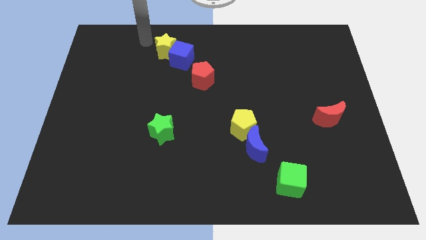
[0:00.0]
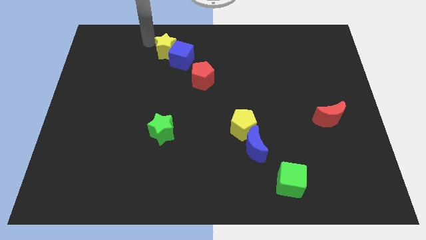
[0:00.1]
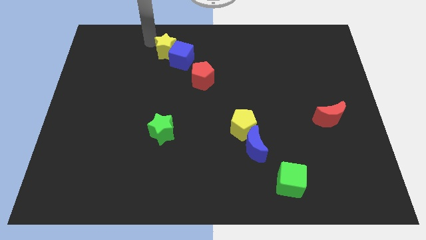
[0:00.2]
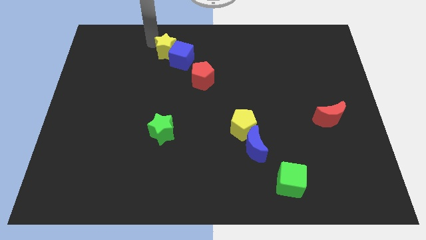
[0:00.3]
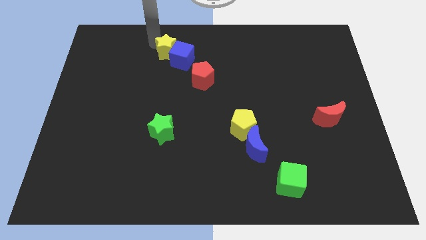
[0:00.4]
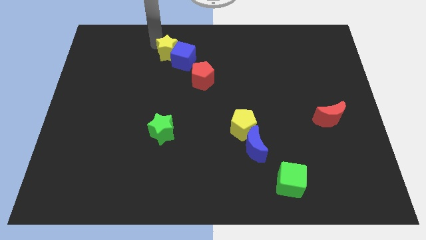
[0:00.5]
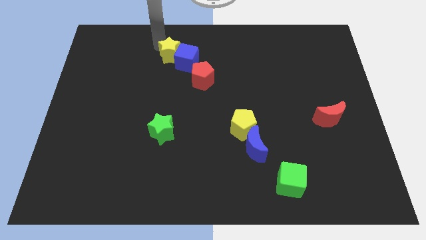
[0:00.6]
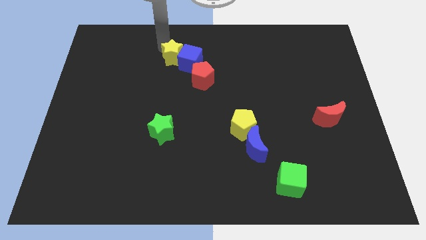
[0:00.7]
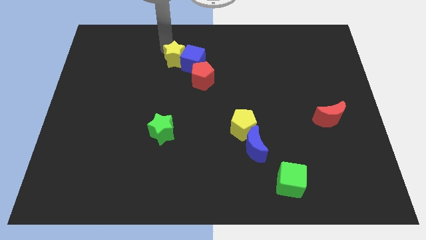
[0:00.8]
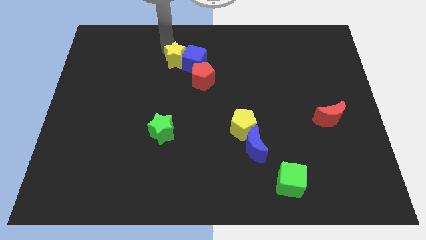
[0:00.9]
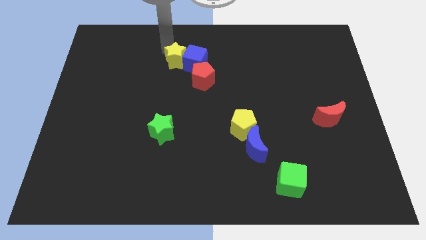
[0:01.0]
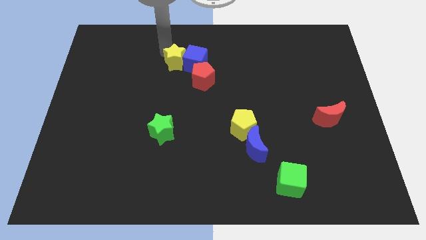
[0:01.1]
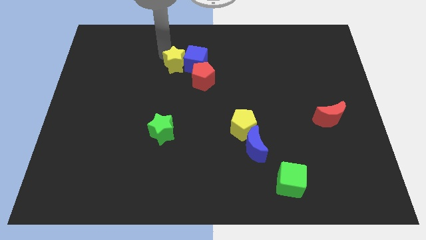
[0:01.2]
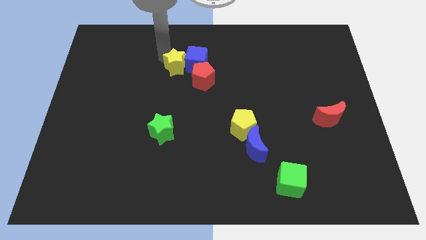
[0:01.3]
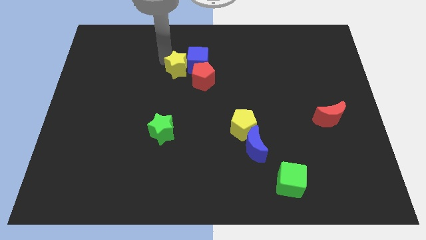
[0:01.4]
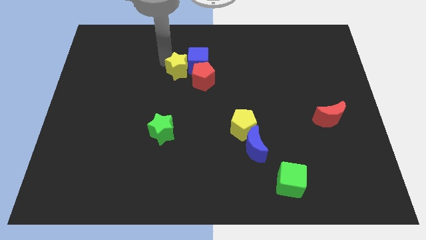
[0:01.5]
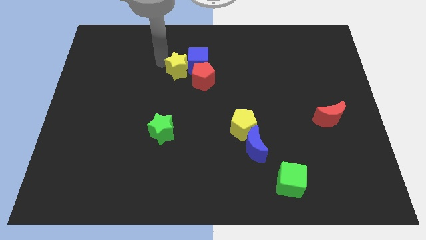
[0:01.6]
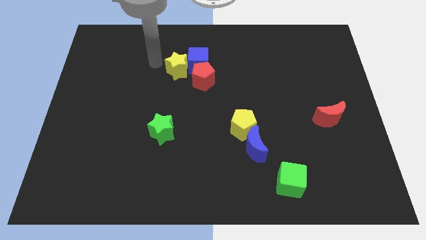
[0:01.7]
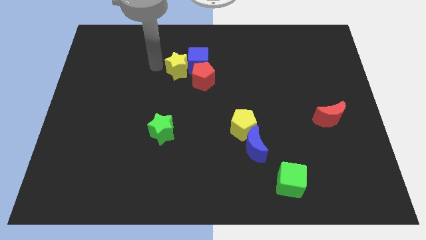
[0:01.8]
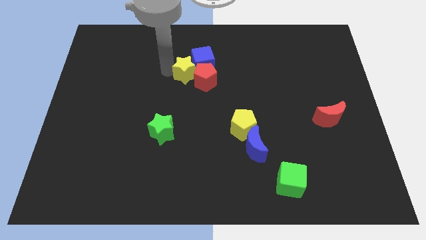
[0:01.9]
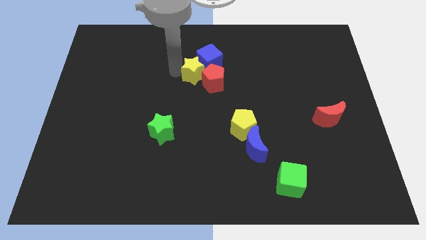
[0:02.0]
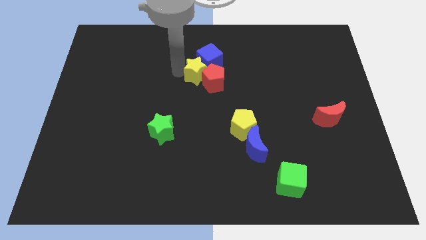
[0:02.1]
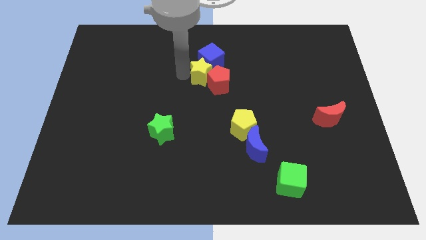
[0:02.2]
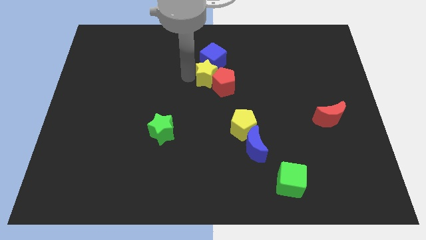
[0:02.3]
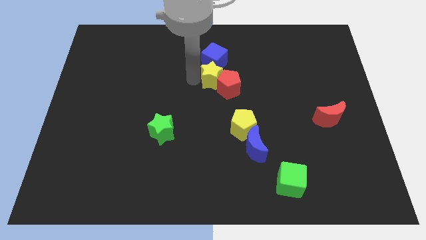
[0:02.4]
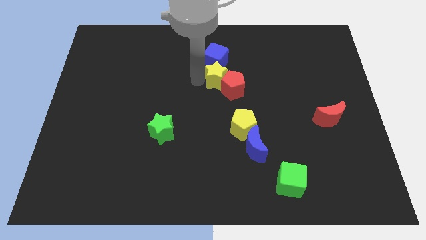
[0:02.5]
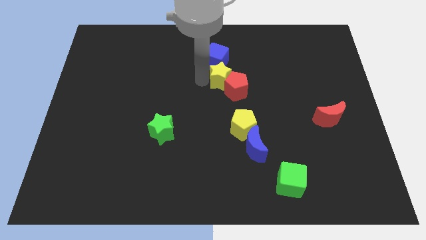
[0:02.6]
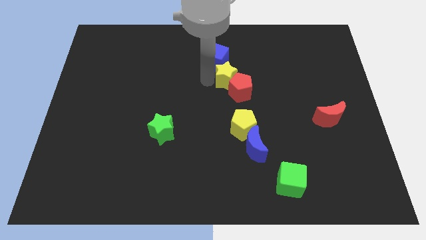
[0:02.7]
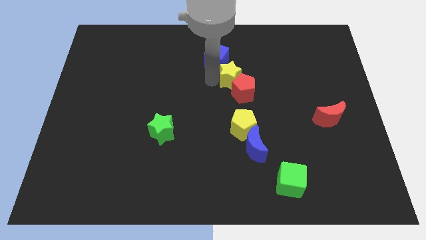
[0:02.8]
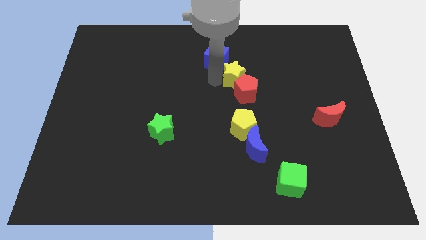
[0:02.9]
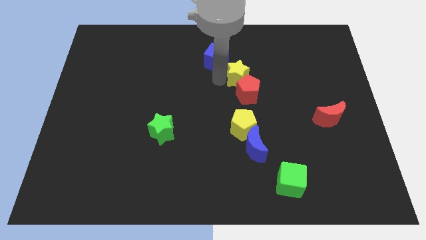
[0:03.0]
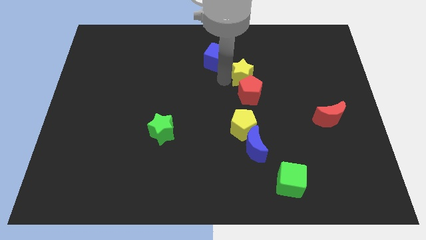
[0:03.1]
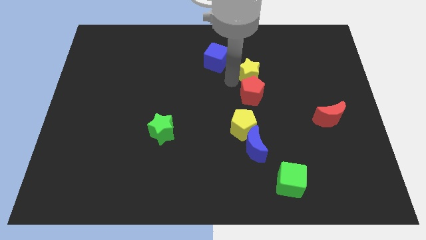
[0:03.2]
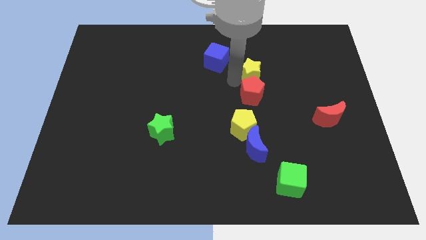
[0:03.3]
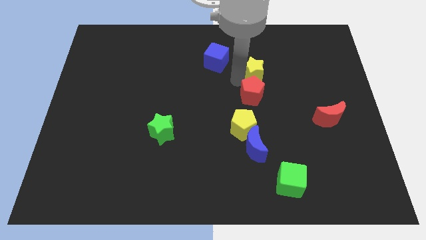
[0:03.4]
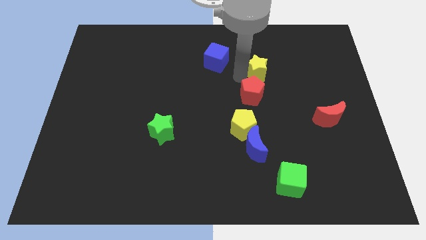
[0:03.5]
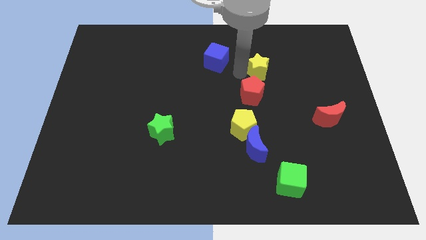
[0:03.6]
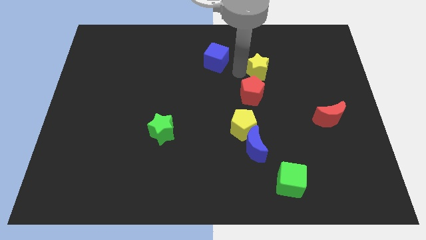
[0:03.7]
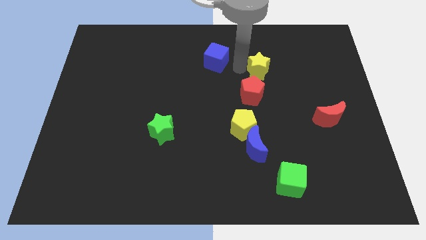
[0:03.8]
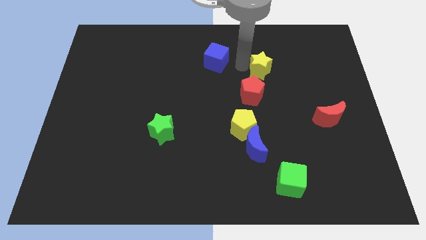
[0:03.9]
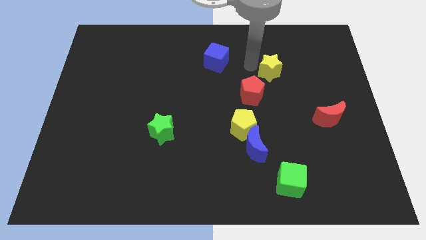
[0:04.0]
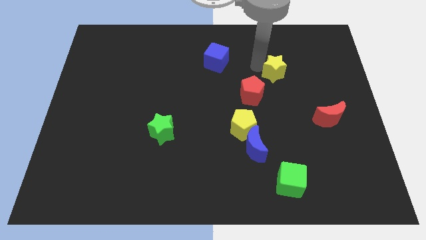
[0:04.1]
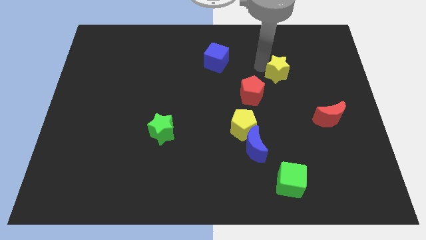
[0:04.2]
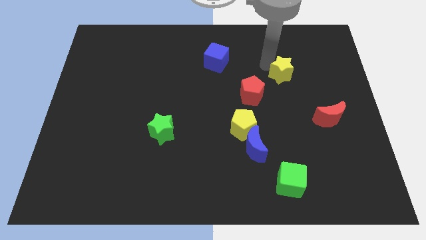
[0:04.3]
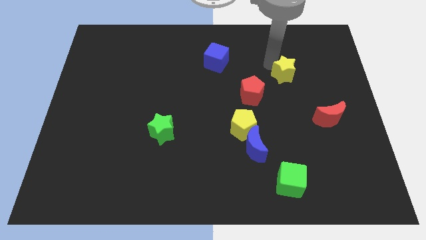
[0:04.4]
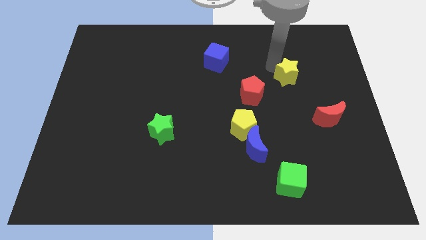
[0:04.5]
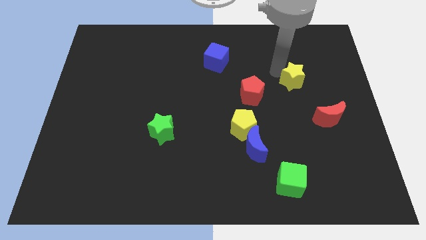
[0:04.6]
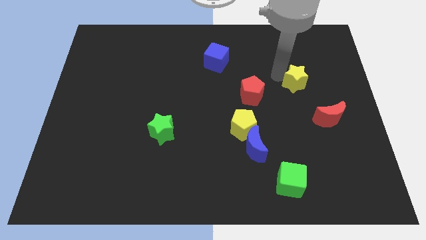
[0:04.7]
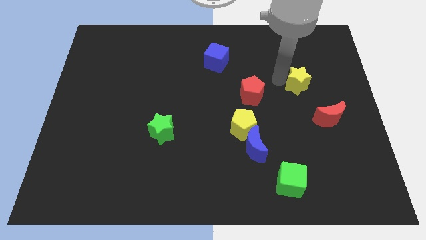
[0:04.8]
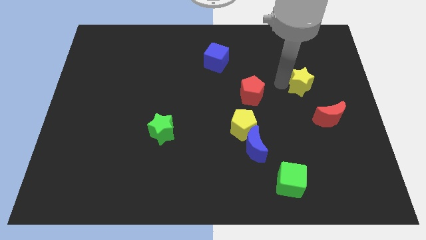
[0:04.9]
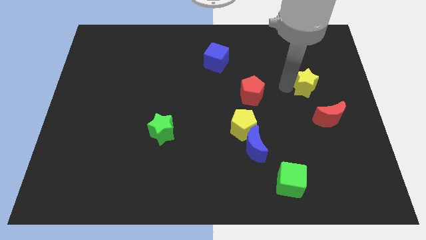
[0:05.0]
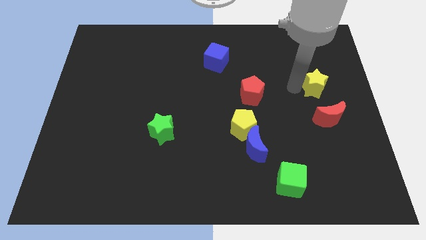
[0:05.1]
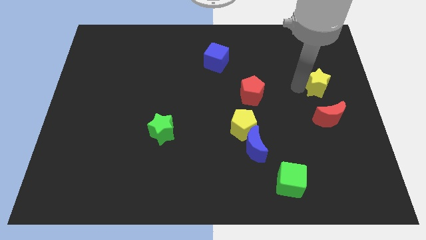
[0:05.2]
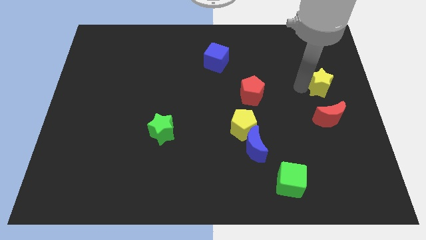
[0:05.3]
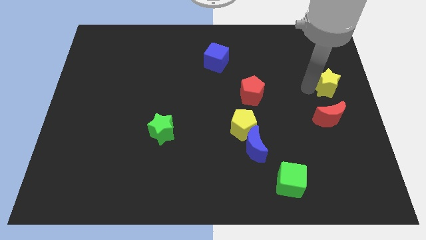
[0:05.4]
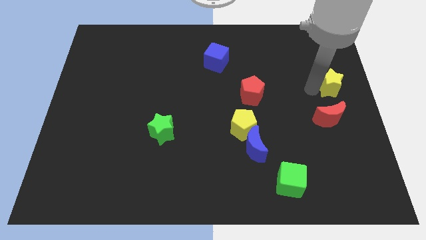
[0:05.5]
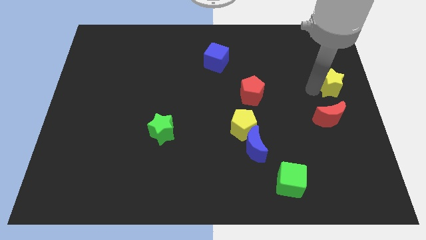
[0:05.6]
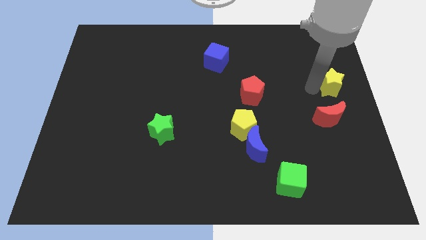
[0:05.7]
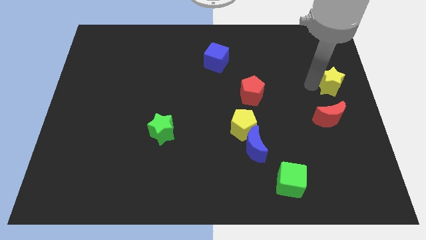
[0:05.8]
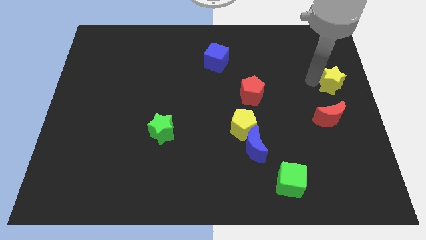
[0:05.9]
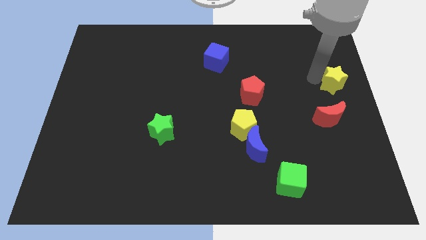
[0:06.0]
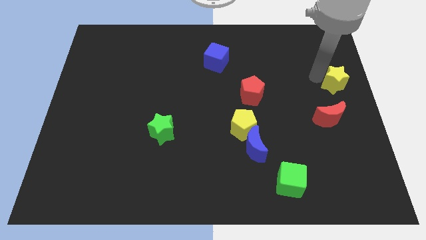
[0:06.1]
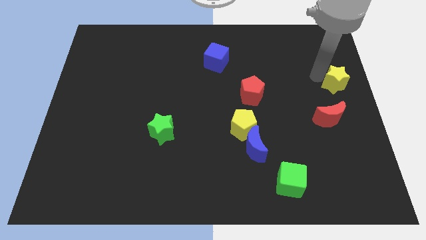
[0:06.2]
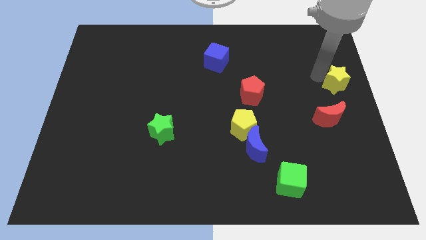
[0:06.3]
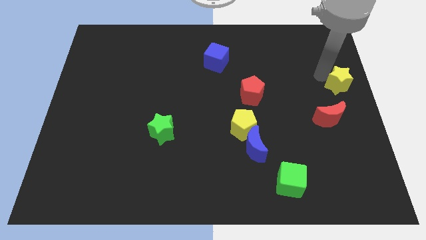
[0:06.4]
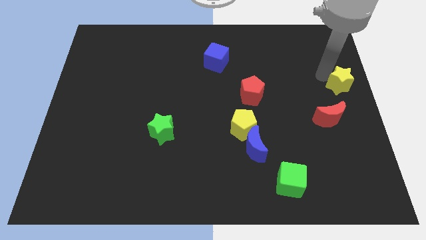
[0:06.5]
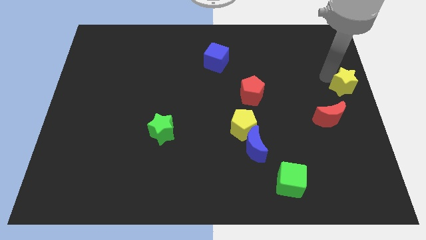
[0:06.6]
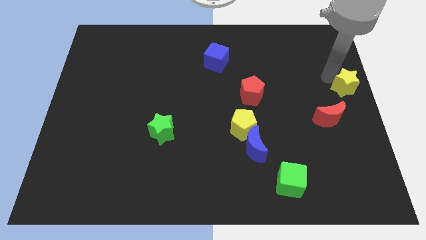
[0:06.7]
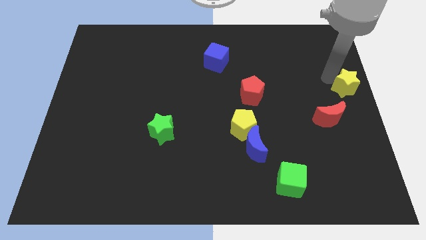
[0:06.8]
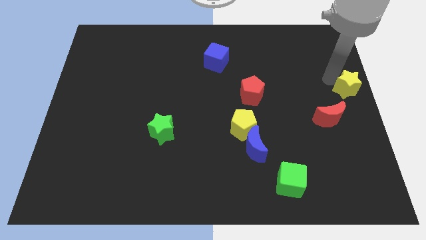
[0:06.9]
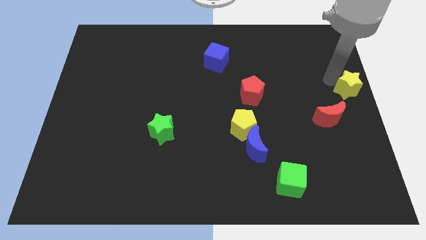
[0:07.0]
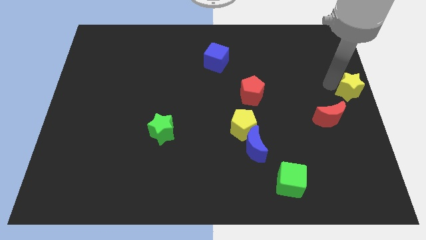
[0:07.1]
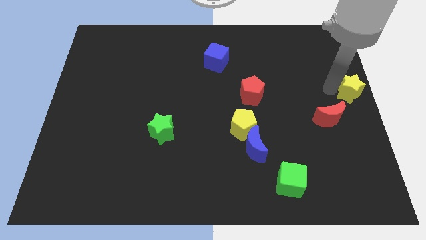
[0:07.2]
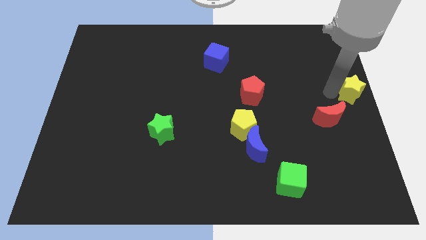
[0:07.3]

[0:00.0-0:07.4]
place the yellow star to the center right of the board

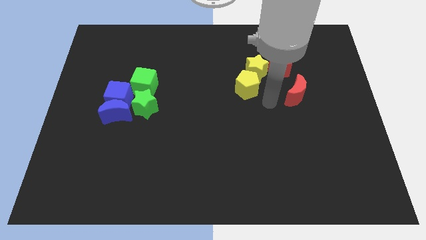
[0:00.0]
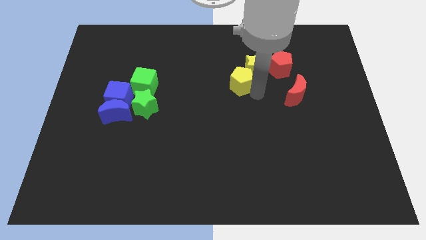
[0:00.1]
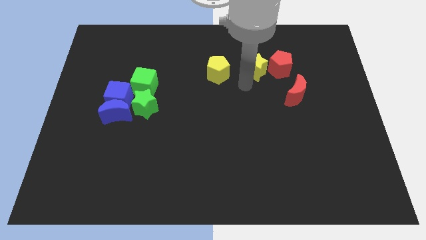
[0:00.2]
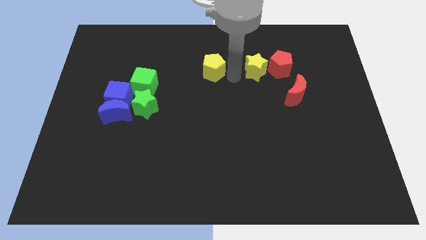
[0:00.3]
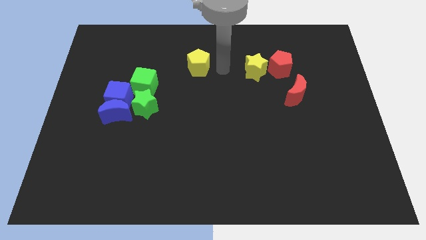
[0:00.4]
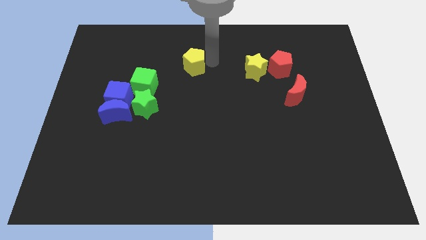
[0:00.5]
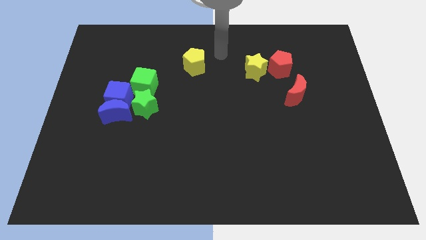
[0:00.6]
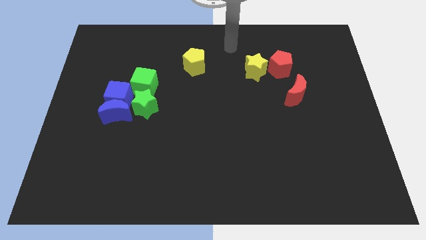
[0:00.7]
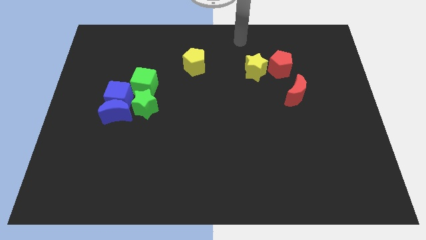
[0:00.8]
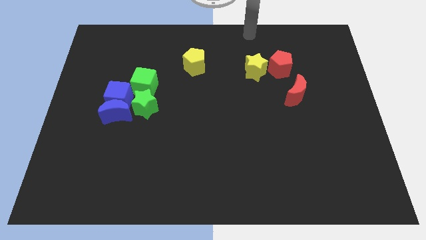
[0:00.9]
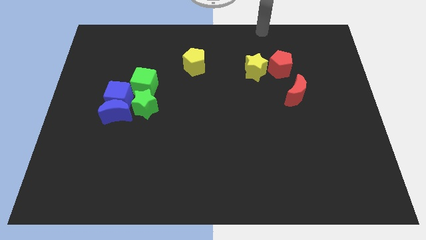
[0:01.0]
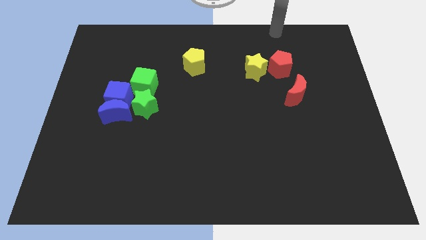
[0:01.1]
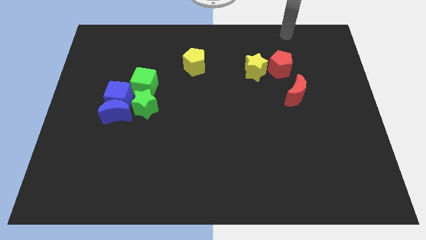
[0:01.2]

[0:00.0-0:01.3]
move the yellow pentagon slightly left

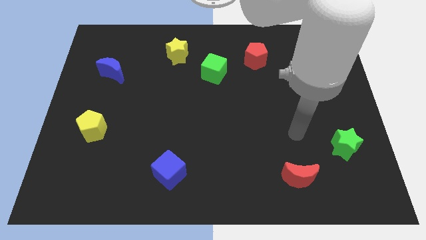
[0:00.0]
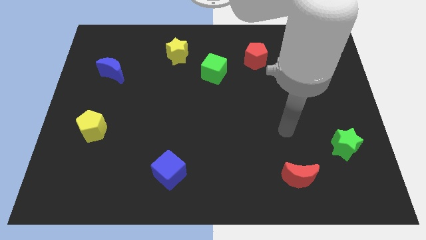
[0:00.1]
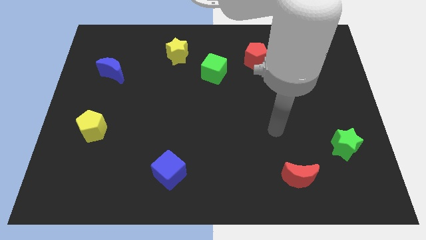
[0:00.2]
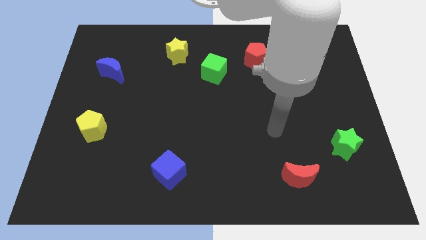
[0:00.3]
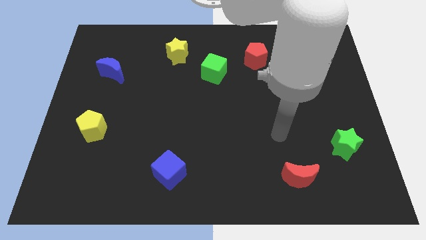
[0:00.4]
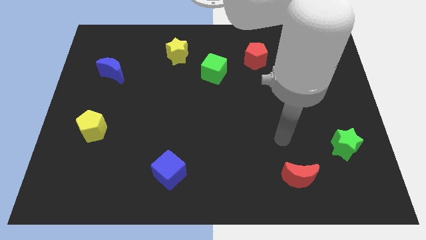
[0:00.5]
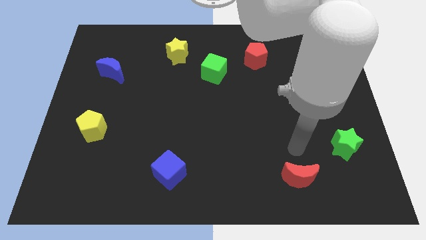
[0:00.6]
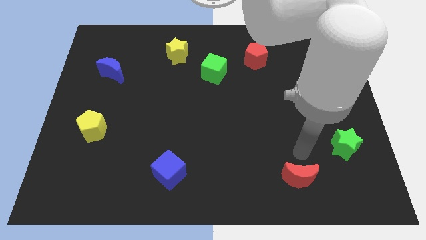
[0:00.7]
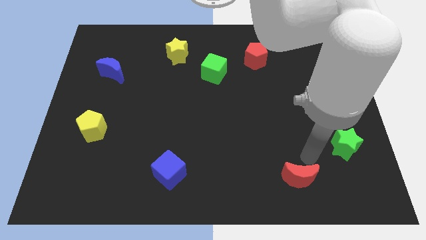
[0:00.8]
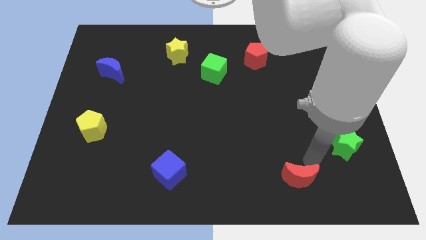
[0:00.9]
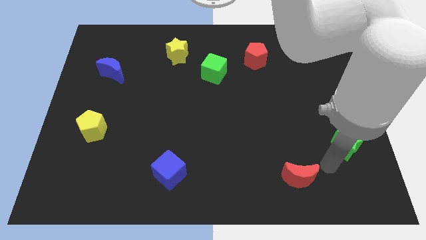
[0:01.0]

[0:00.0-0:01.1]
place your hand in between green star and red moon
